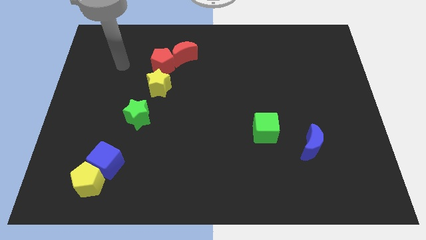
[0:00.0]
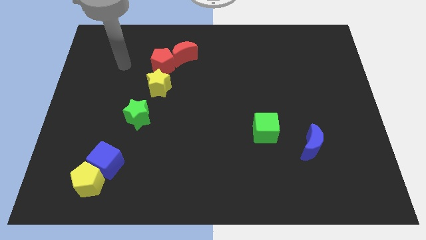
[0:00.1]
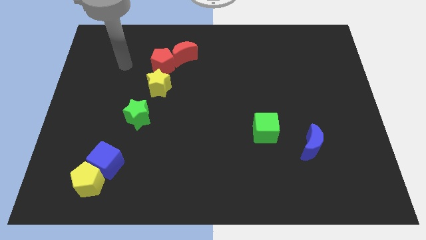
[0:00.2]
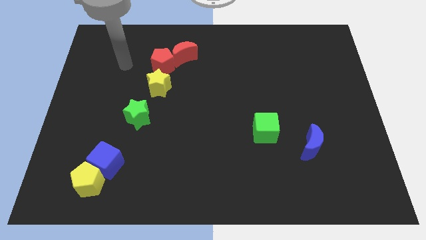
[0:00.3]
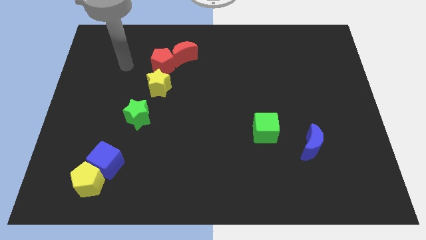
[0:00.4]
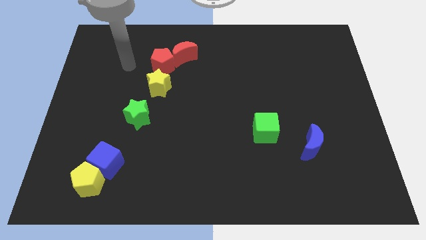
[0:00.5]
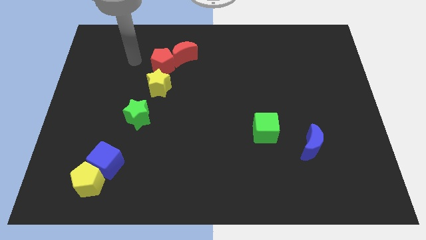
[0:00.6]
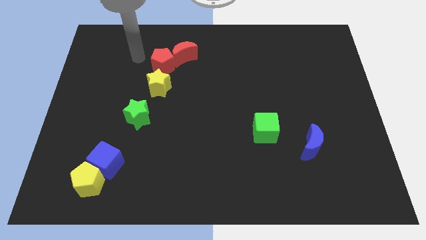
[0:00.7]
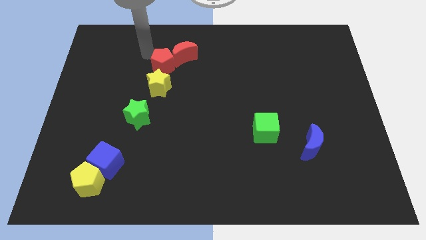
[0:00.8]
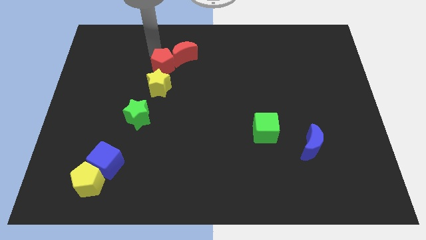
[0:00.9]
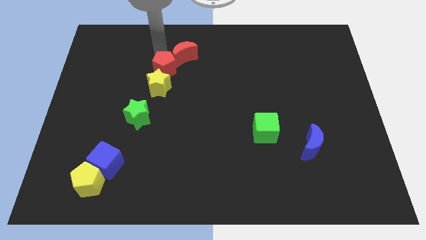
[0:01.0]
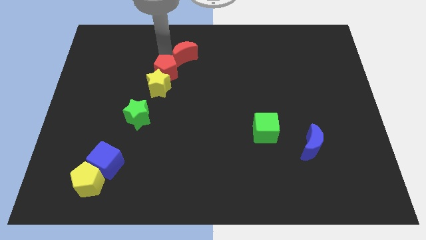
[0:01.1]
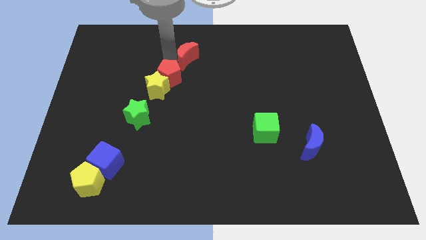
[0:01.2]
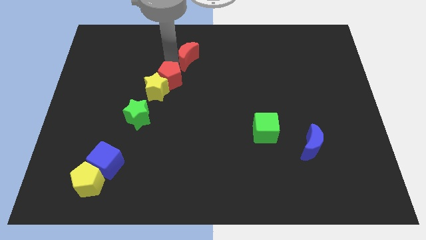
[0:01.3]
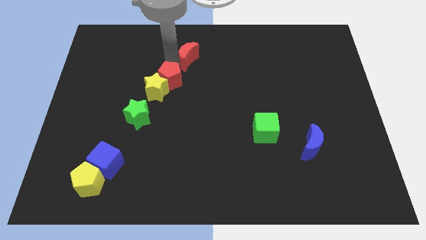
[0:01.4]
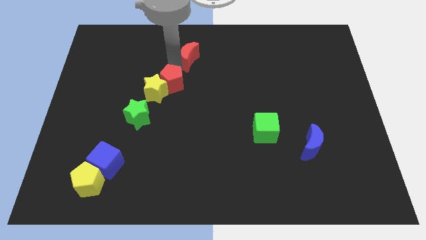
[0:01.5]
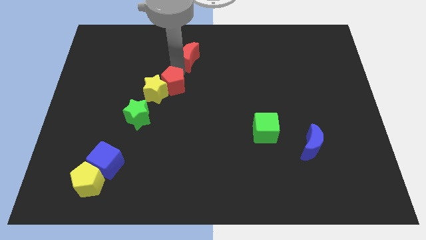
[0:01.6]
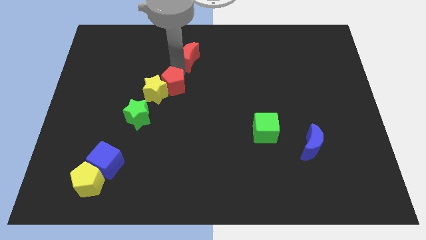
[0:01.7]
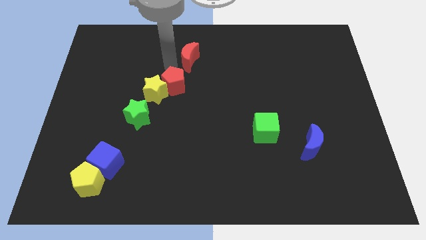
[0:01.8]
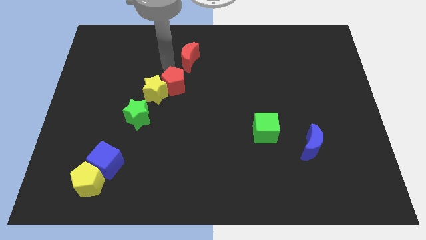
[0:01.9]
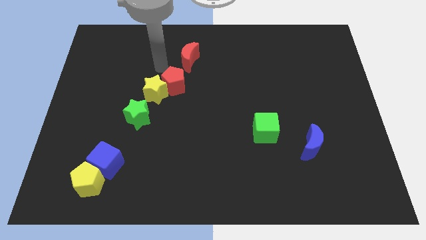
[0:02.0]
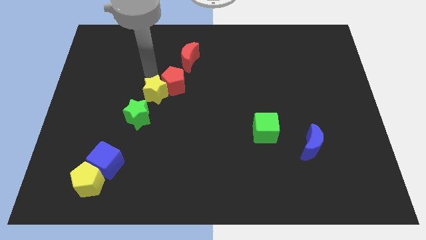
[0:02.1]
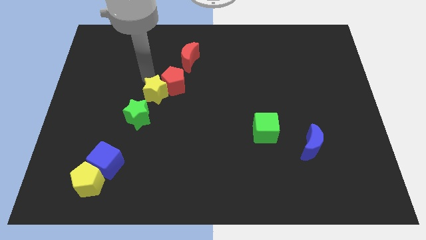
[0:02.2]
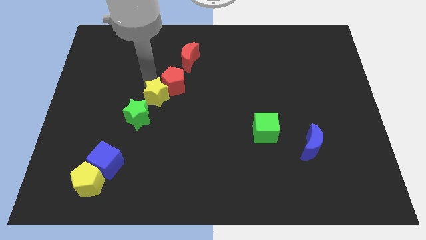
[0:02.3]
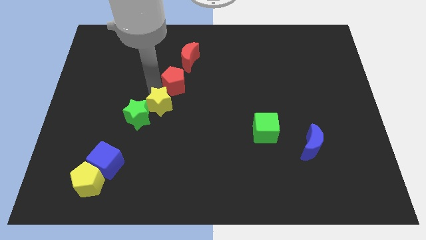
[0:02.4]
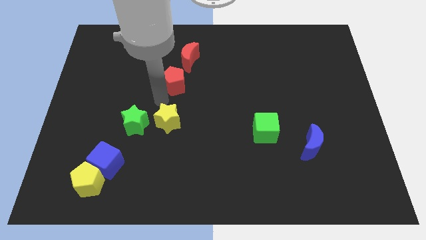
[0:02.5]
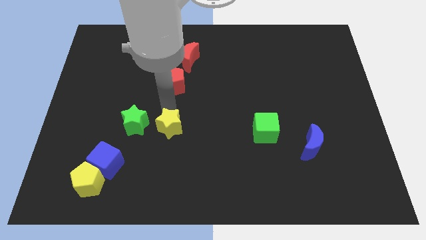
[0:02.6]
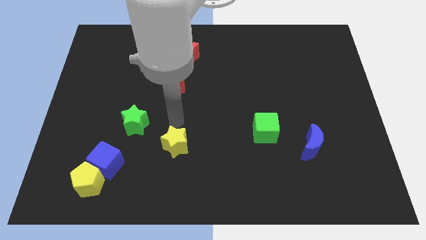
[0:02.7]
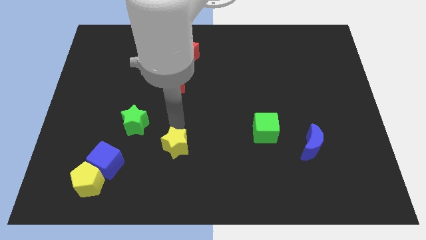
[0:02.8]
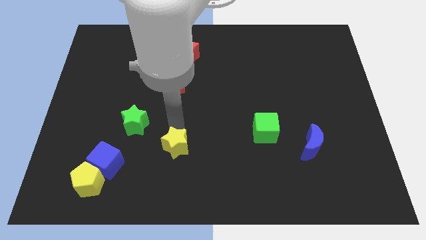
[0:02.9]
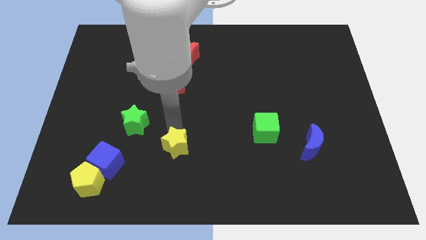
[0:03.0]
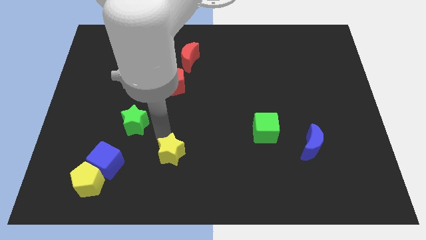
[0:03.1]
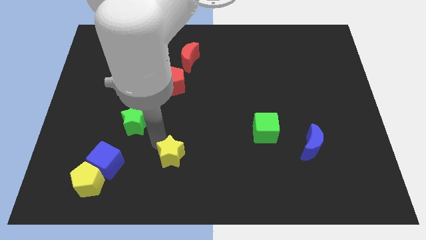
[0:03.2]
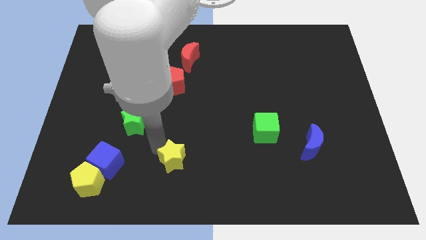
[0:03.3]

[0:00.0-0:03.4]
push the yellow star away from the red pentagon

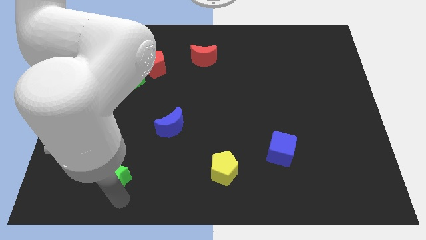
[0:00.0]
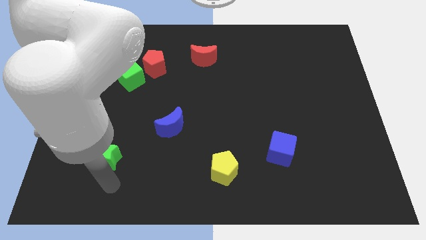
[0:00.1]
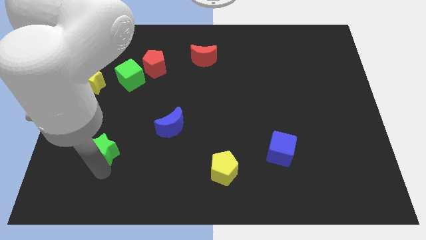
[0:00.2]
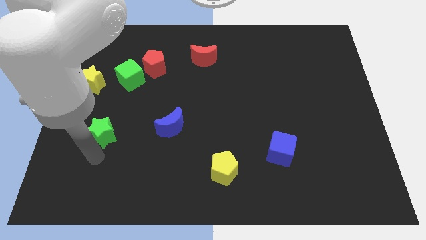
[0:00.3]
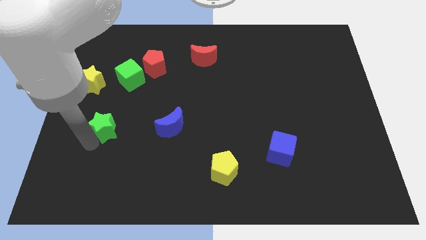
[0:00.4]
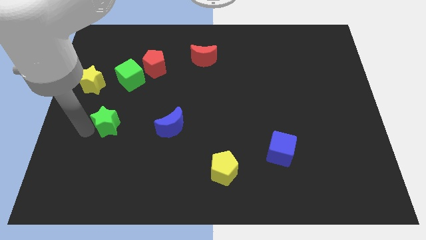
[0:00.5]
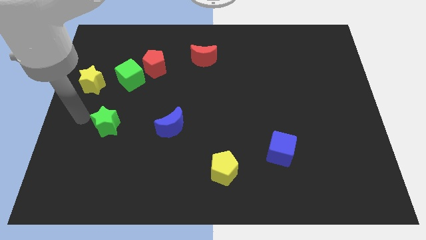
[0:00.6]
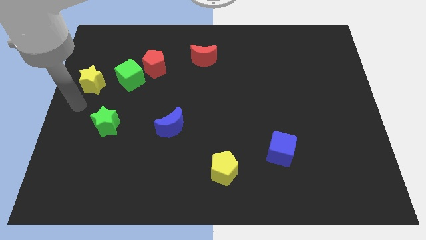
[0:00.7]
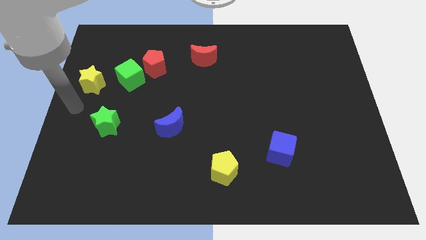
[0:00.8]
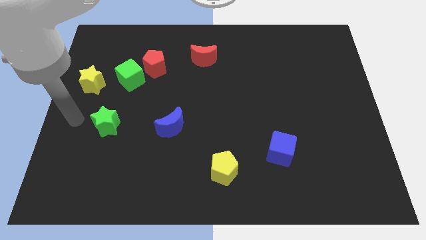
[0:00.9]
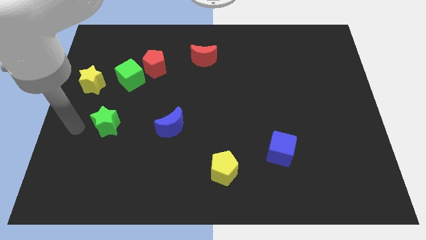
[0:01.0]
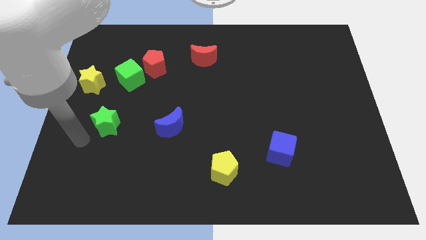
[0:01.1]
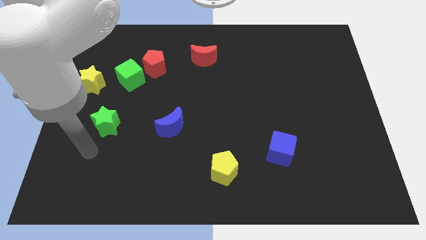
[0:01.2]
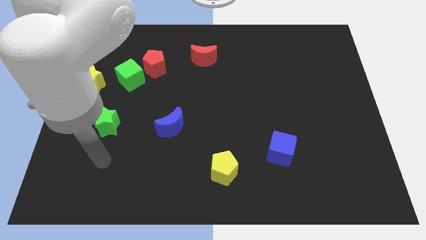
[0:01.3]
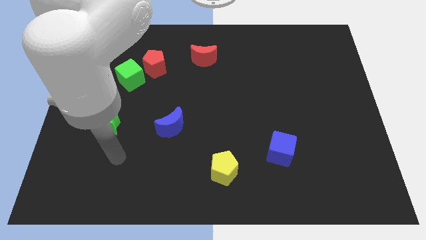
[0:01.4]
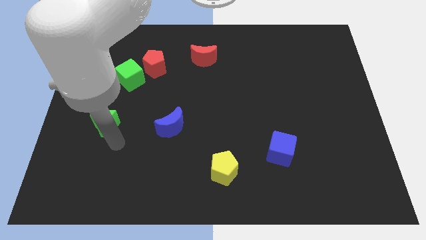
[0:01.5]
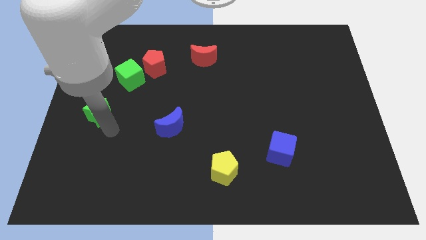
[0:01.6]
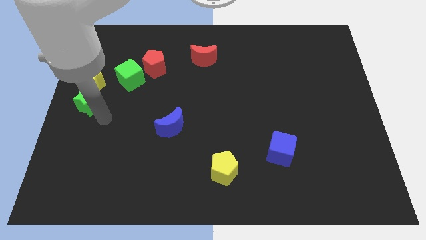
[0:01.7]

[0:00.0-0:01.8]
slide the green star towards the bottom side of the yellow star

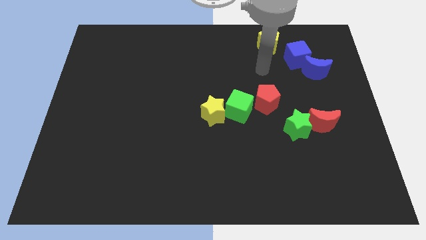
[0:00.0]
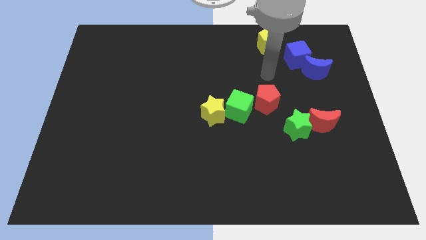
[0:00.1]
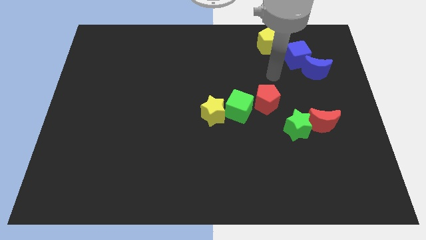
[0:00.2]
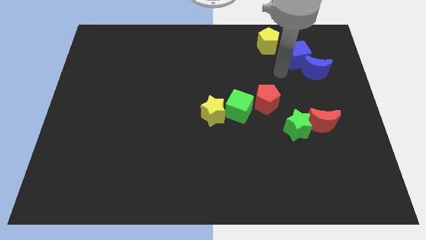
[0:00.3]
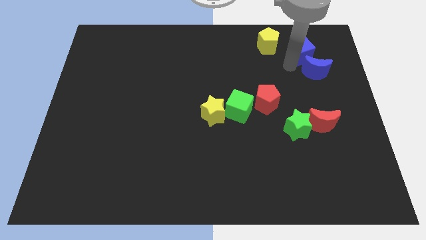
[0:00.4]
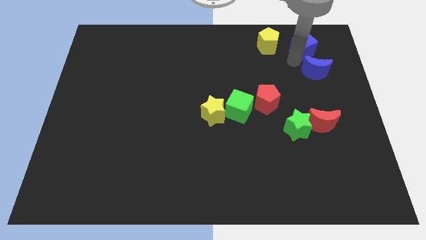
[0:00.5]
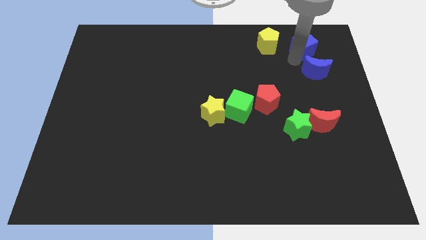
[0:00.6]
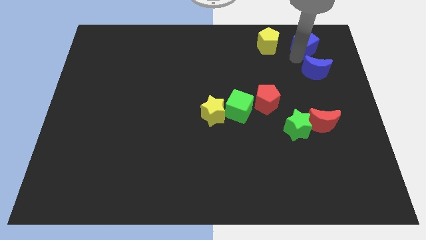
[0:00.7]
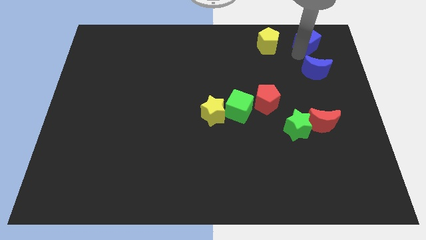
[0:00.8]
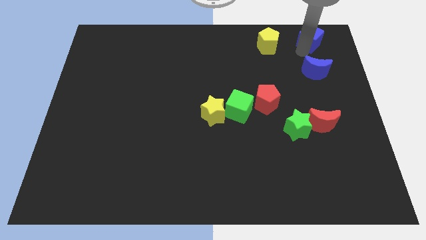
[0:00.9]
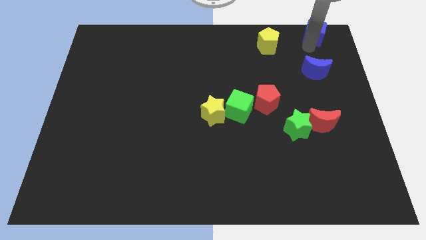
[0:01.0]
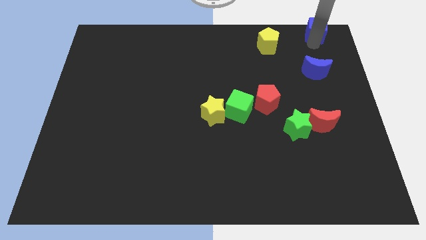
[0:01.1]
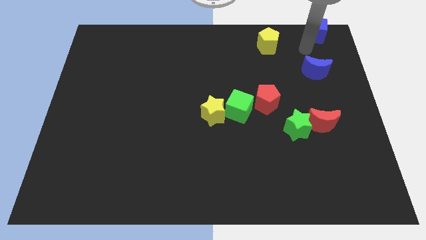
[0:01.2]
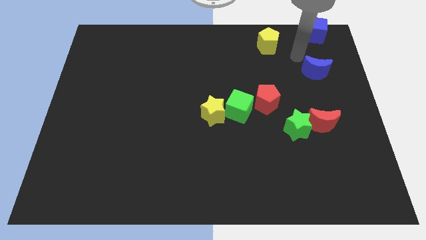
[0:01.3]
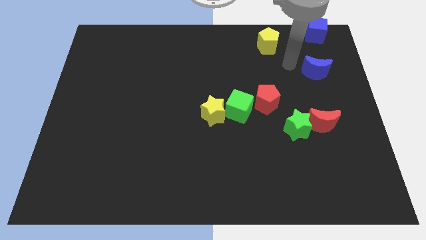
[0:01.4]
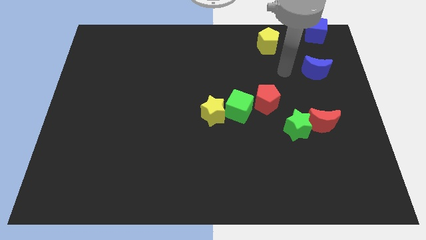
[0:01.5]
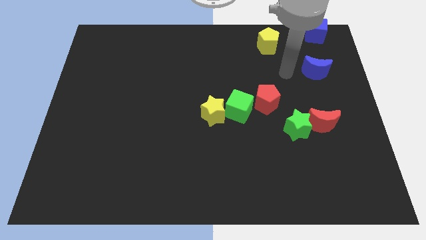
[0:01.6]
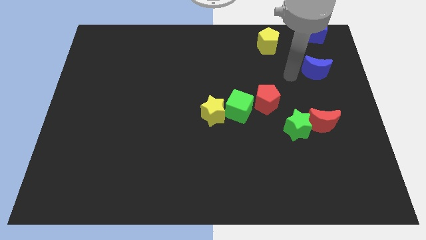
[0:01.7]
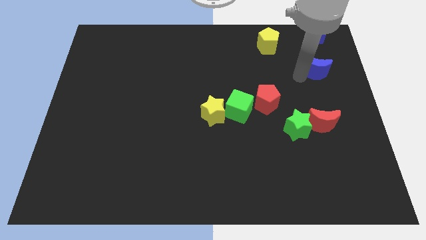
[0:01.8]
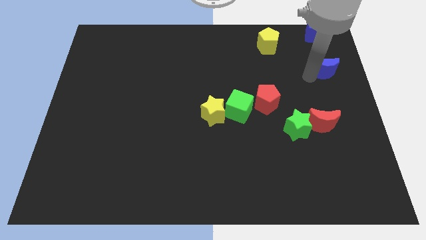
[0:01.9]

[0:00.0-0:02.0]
place the blue cube at the top right of the board

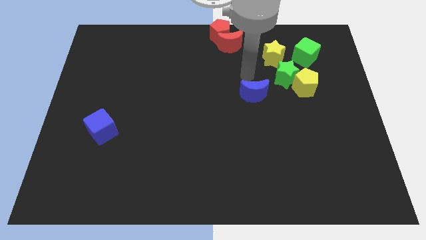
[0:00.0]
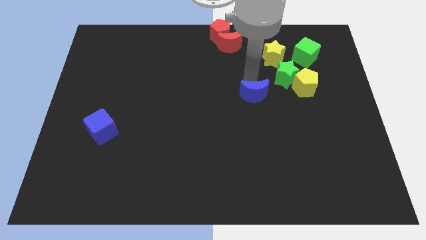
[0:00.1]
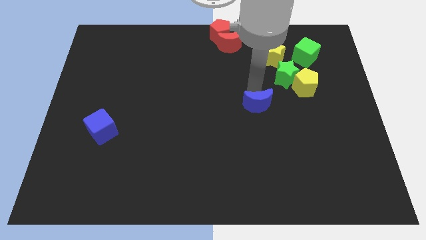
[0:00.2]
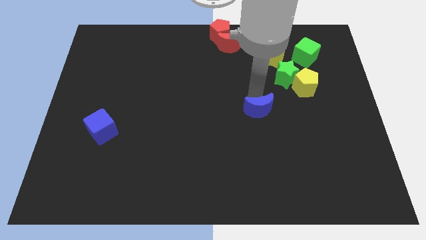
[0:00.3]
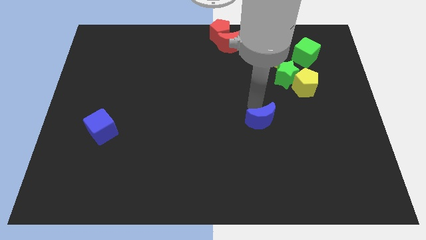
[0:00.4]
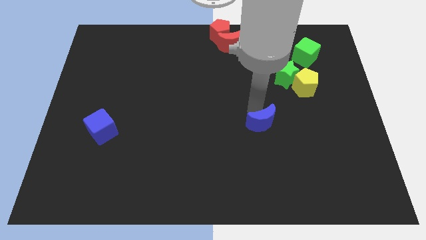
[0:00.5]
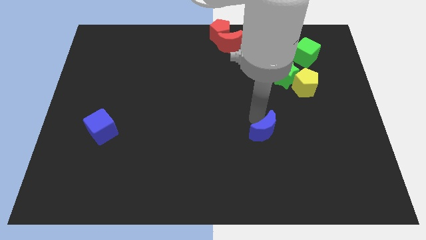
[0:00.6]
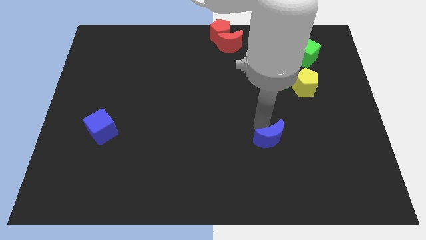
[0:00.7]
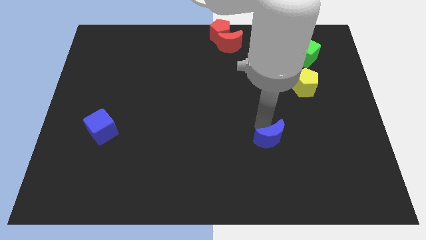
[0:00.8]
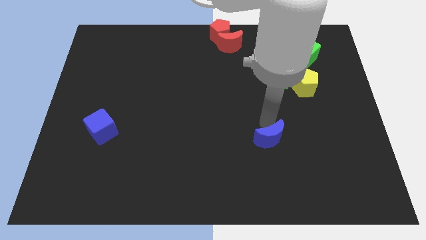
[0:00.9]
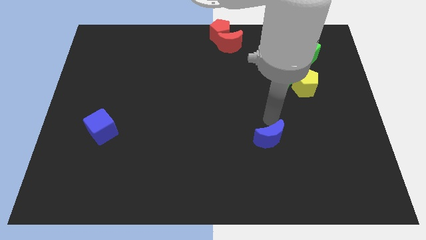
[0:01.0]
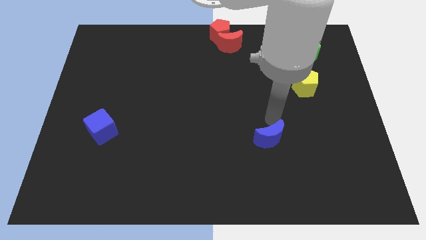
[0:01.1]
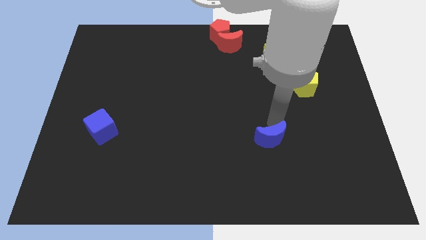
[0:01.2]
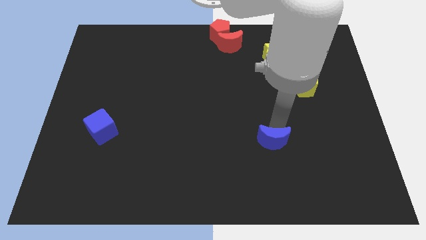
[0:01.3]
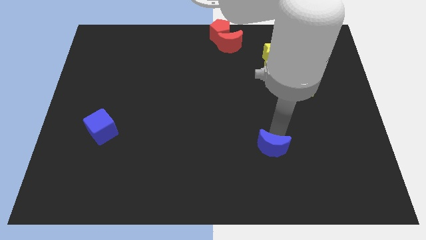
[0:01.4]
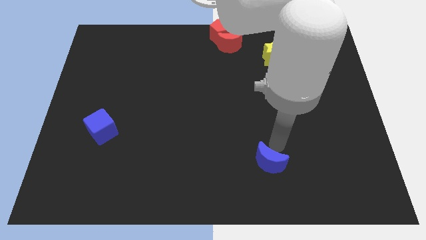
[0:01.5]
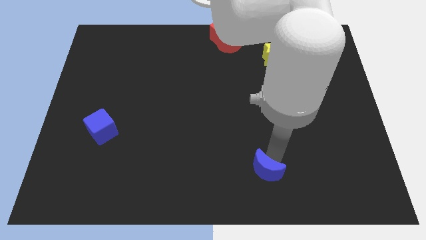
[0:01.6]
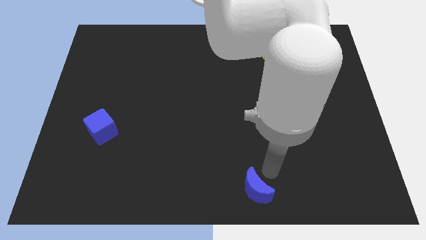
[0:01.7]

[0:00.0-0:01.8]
push blue crescent towards bottom

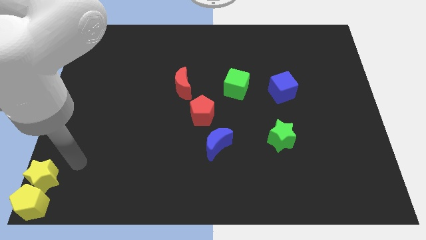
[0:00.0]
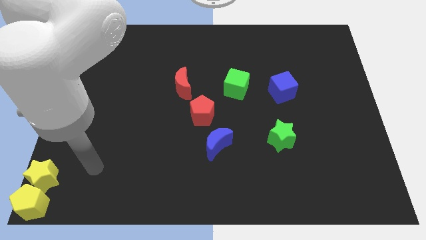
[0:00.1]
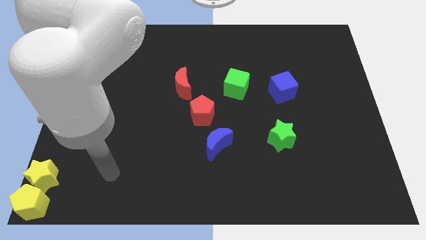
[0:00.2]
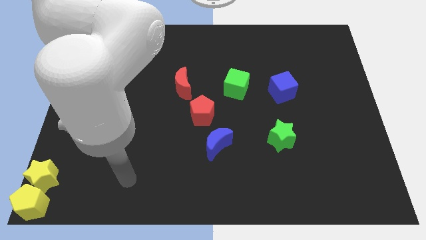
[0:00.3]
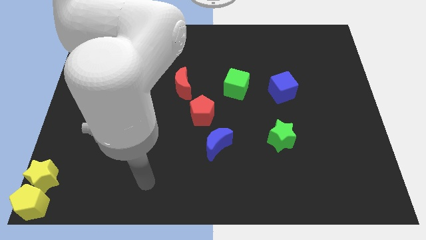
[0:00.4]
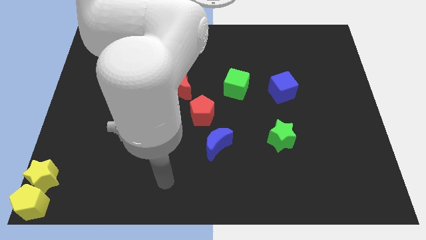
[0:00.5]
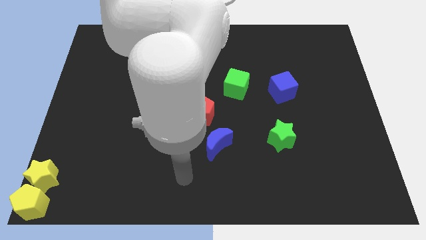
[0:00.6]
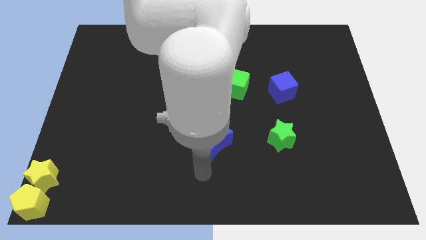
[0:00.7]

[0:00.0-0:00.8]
move the arm below the blue moon
